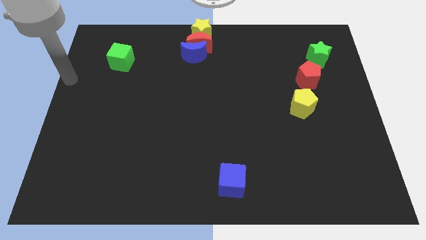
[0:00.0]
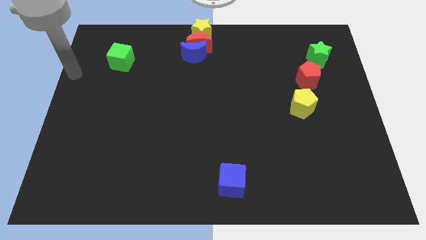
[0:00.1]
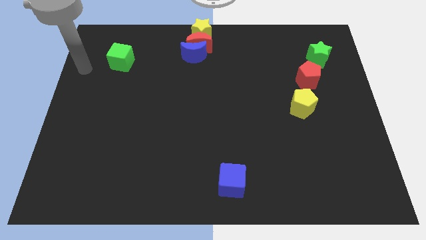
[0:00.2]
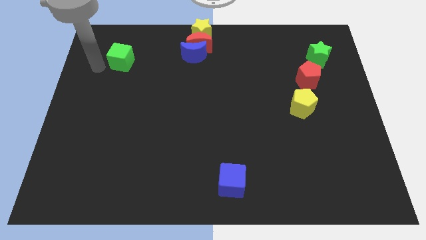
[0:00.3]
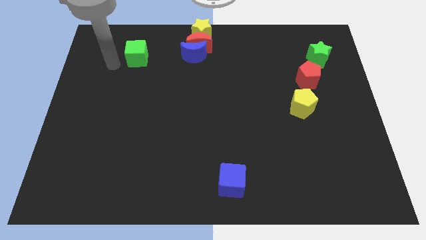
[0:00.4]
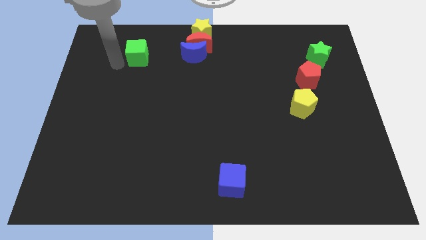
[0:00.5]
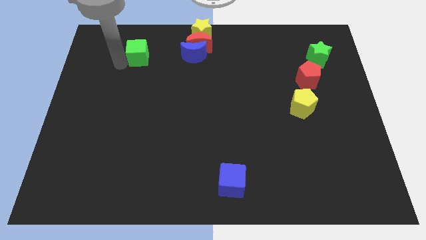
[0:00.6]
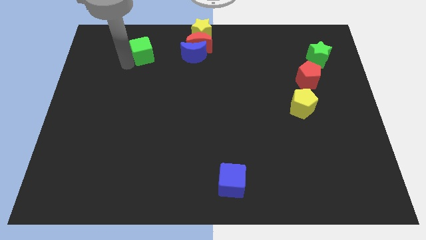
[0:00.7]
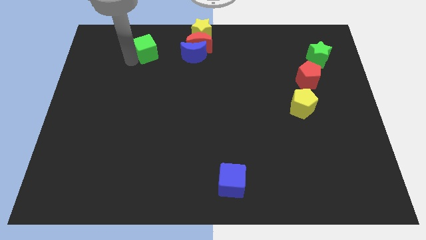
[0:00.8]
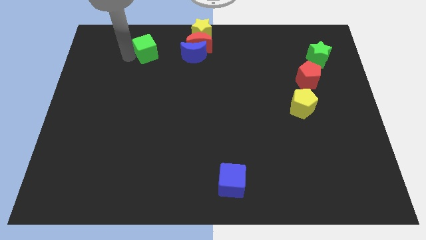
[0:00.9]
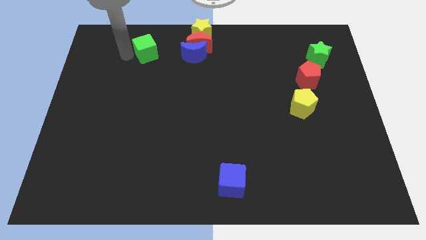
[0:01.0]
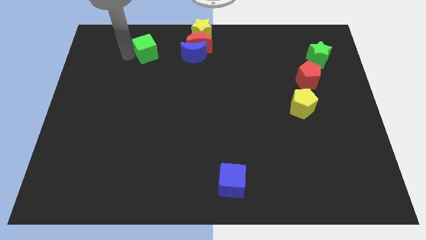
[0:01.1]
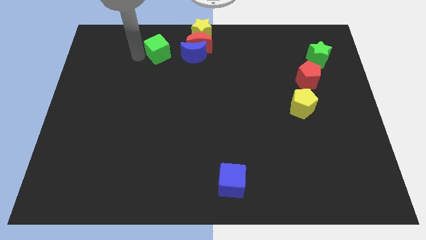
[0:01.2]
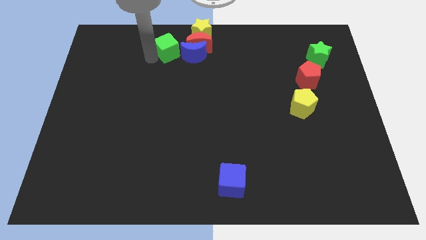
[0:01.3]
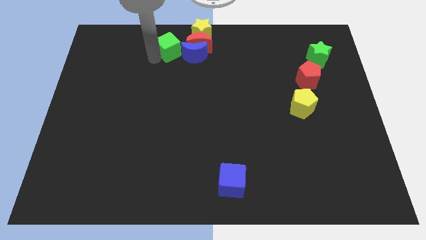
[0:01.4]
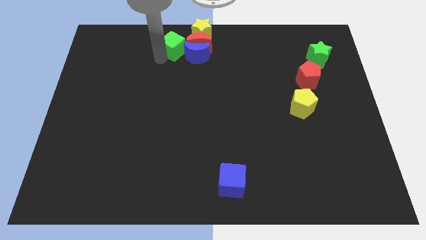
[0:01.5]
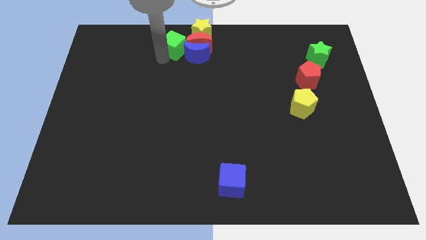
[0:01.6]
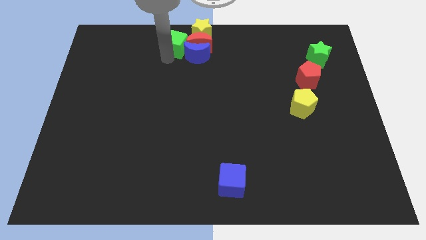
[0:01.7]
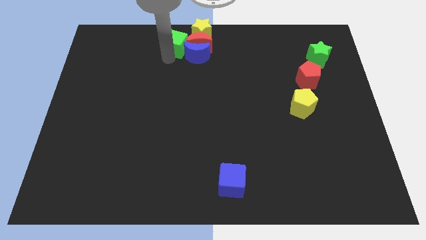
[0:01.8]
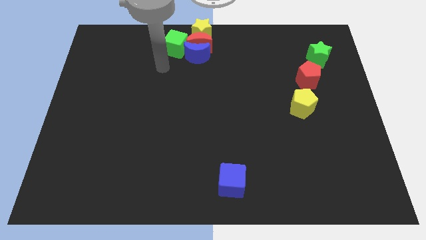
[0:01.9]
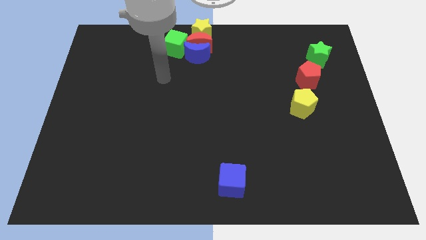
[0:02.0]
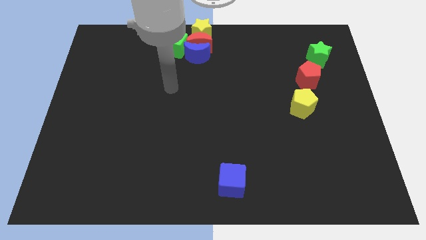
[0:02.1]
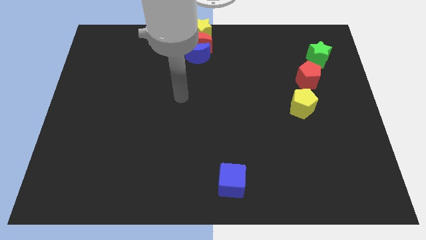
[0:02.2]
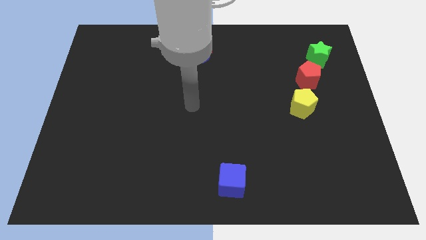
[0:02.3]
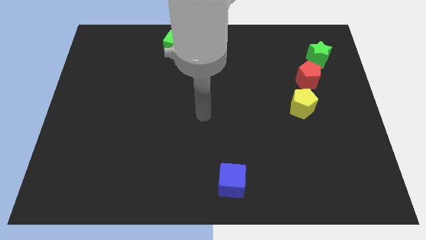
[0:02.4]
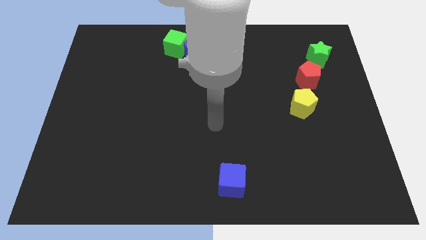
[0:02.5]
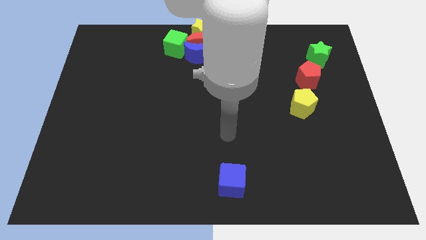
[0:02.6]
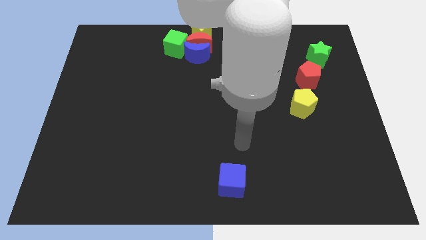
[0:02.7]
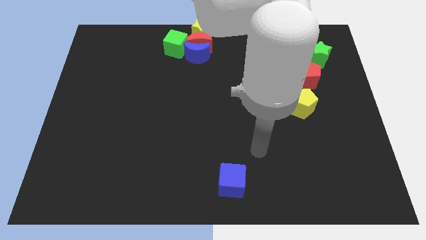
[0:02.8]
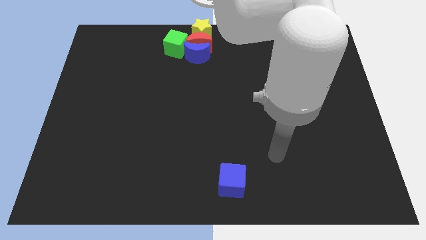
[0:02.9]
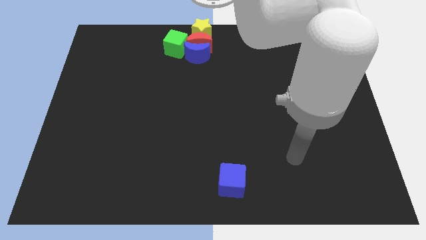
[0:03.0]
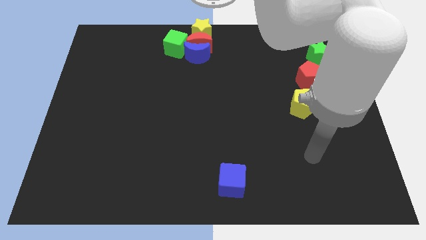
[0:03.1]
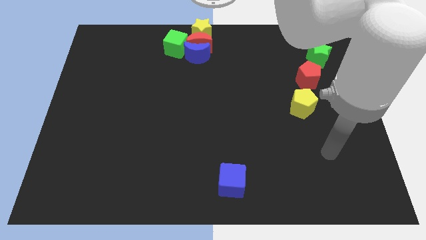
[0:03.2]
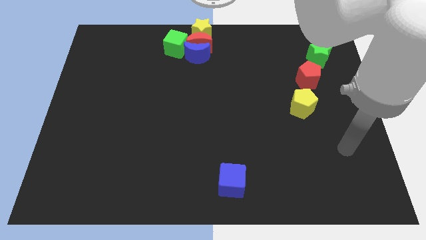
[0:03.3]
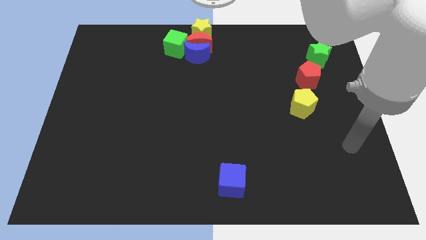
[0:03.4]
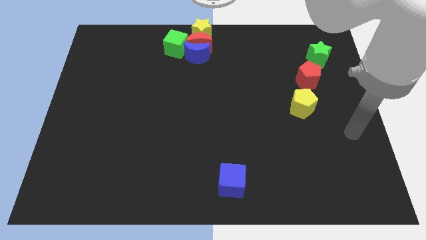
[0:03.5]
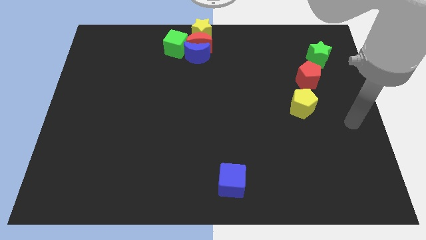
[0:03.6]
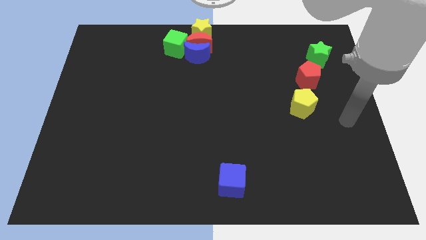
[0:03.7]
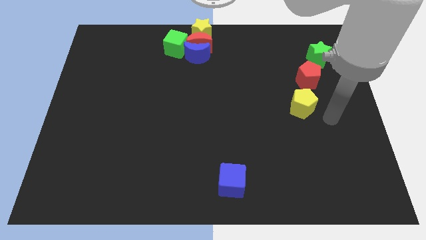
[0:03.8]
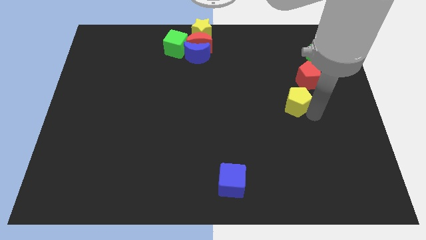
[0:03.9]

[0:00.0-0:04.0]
move the green cube to the left the red crescent

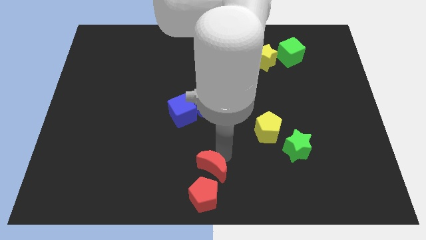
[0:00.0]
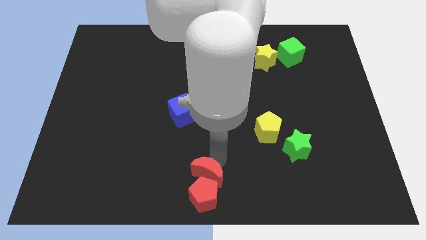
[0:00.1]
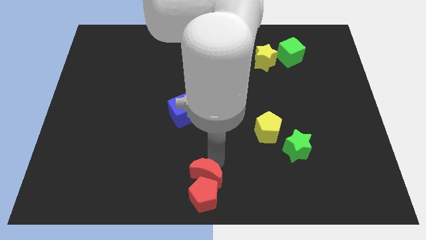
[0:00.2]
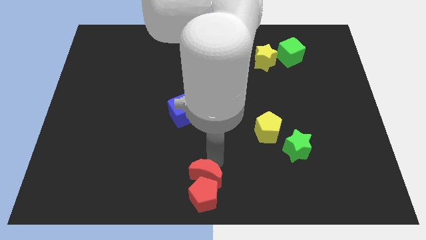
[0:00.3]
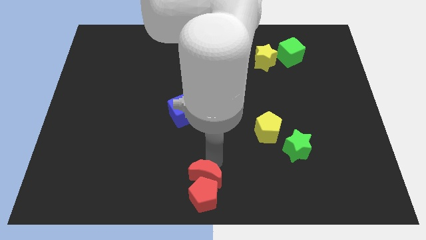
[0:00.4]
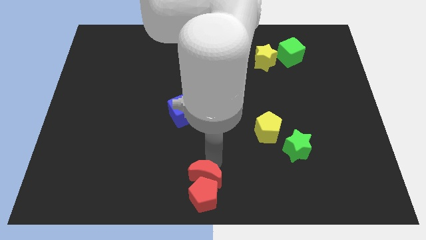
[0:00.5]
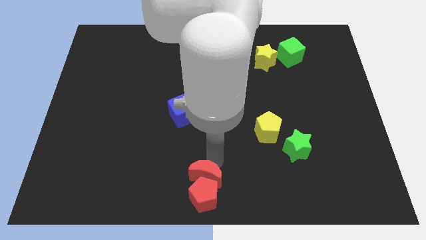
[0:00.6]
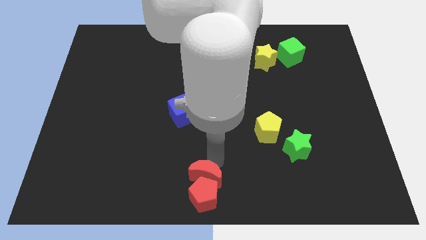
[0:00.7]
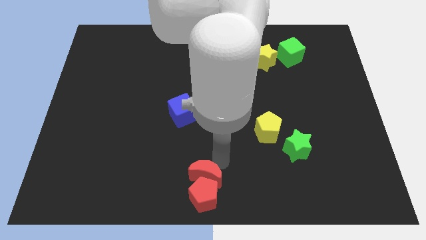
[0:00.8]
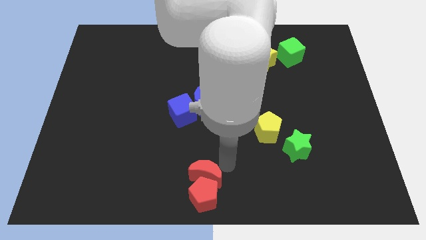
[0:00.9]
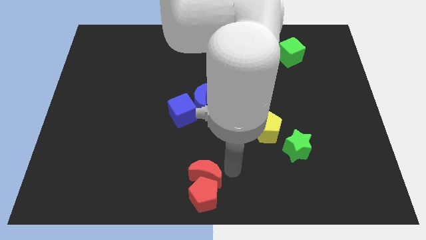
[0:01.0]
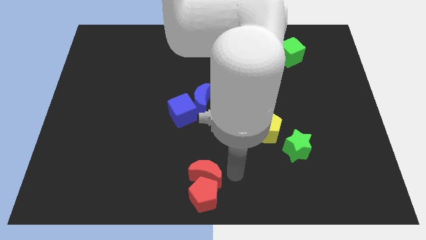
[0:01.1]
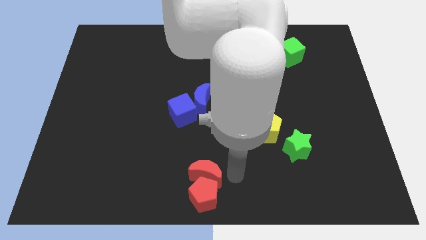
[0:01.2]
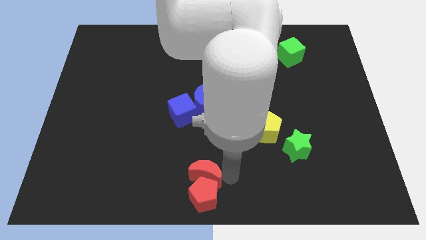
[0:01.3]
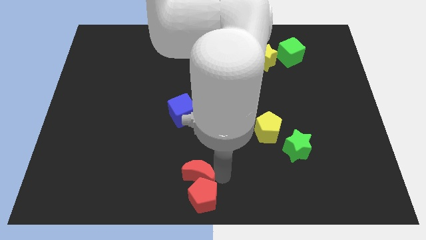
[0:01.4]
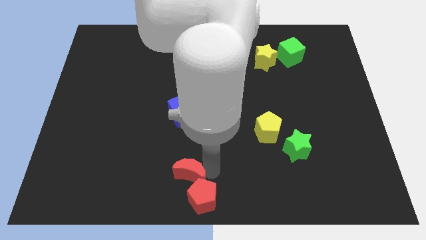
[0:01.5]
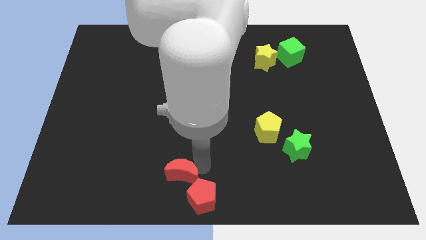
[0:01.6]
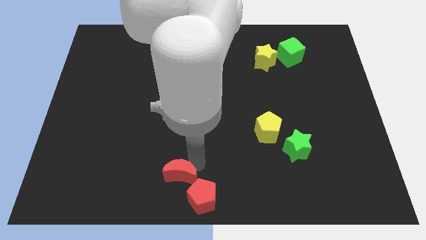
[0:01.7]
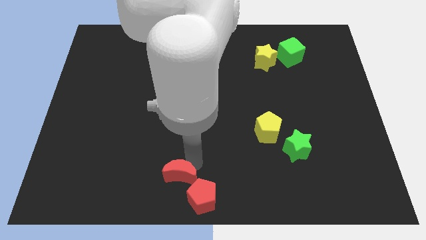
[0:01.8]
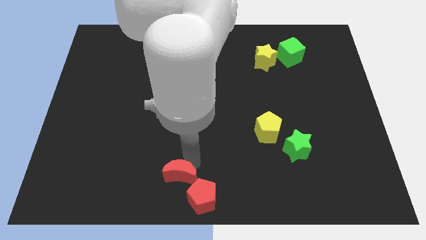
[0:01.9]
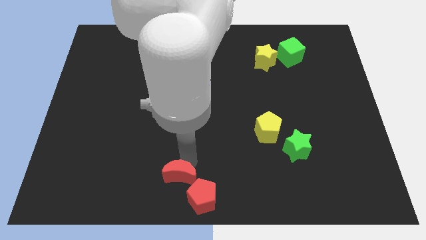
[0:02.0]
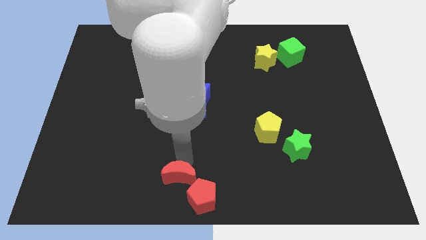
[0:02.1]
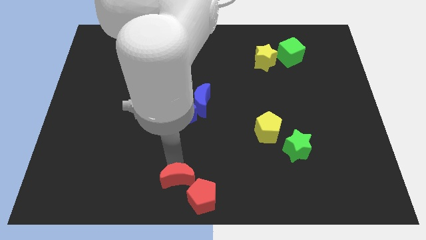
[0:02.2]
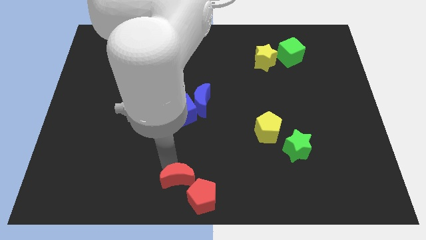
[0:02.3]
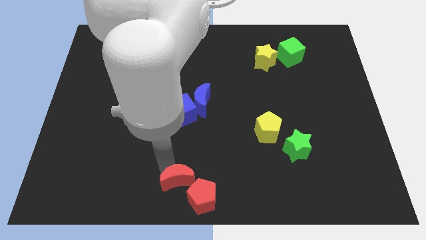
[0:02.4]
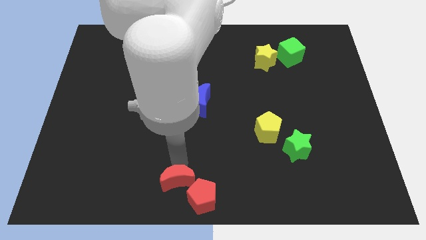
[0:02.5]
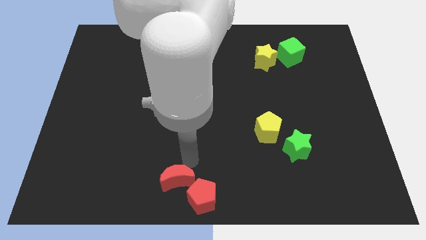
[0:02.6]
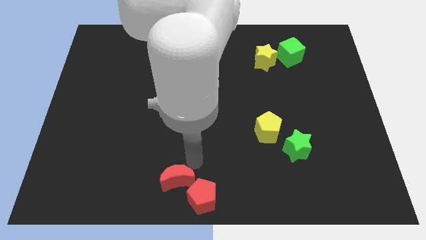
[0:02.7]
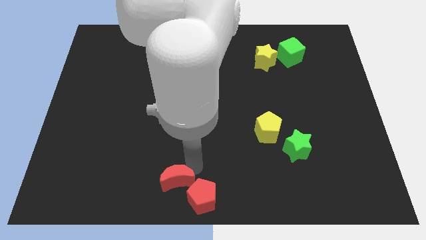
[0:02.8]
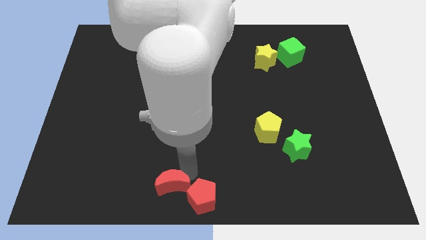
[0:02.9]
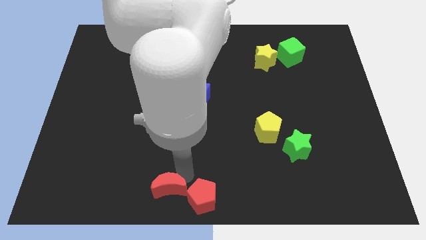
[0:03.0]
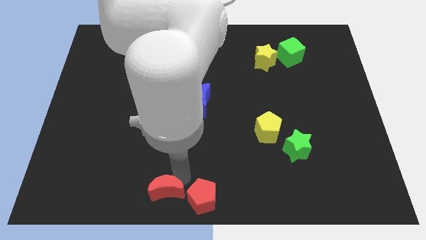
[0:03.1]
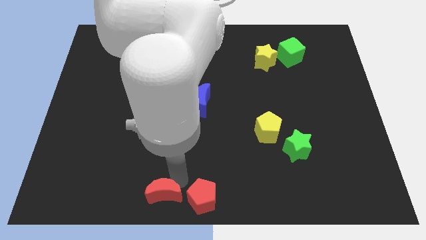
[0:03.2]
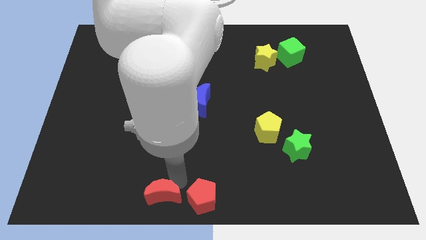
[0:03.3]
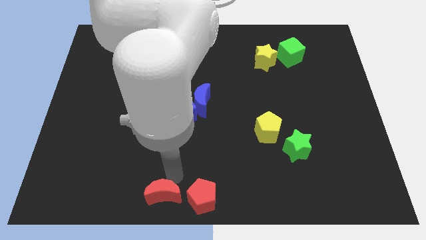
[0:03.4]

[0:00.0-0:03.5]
move the red crescent left to the red pentagon

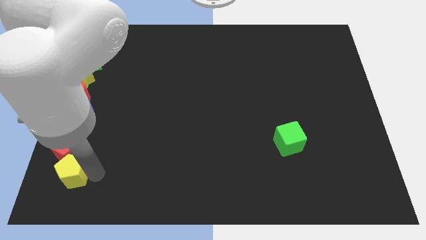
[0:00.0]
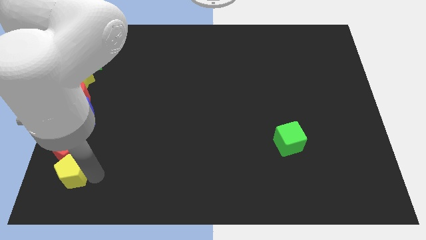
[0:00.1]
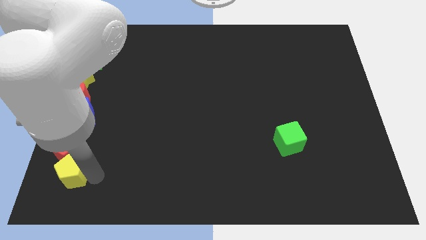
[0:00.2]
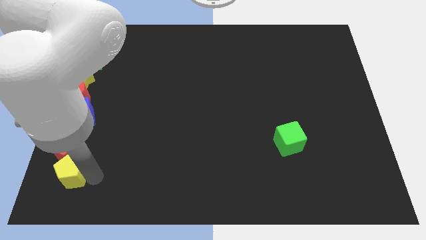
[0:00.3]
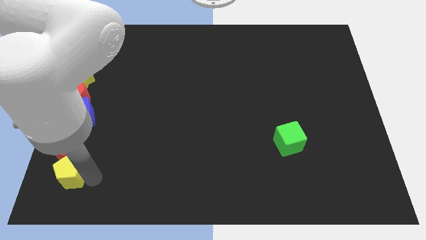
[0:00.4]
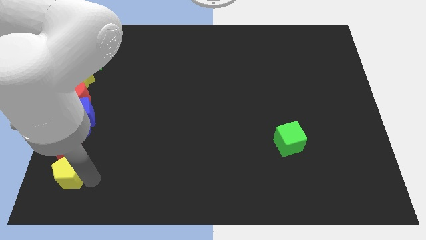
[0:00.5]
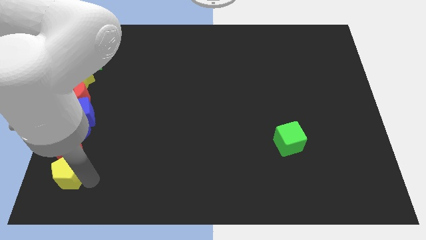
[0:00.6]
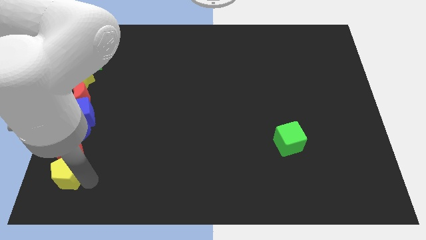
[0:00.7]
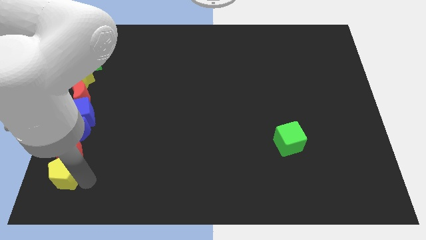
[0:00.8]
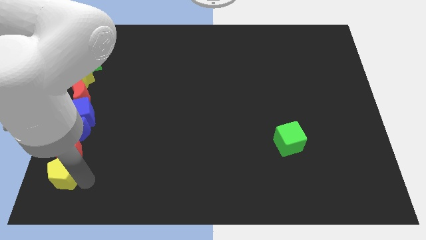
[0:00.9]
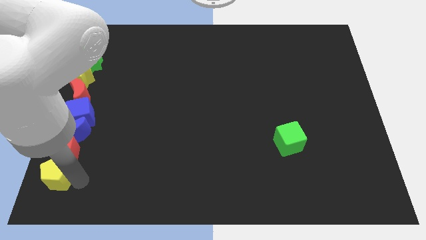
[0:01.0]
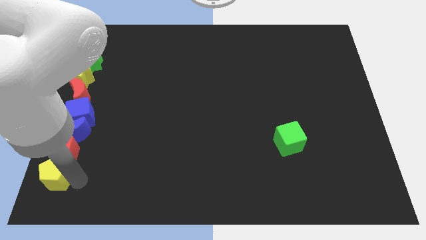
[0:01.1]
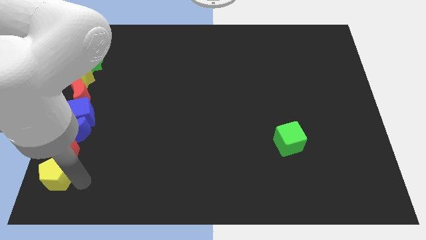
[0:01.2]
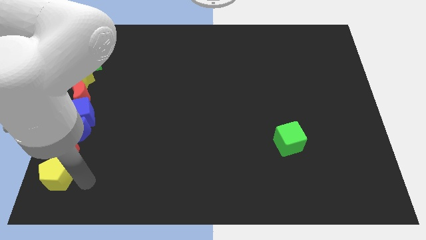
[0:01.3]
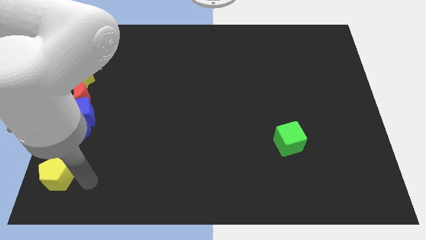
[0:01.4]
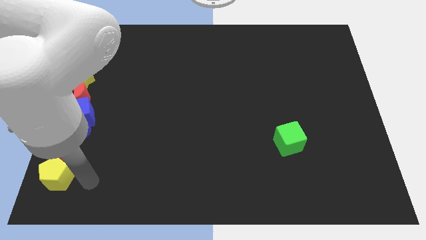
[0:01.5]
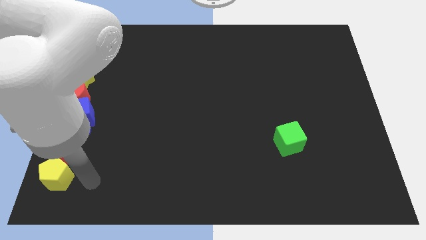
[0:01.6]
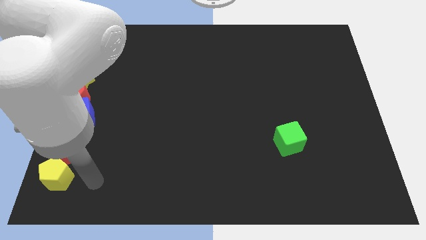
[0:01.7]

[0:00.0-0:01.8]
place yellow pentagon below red pentagon
